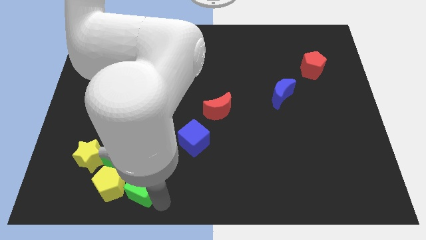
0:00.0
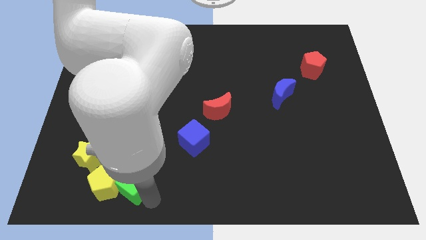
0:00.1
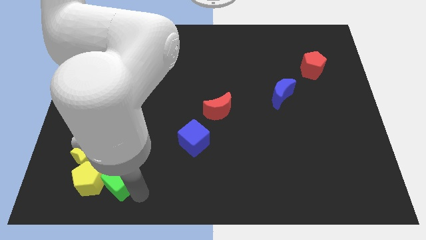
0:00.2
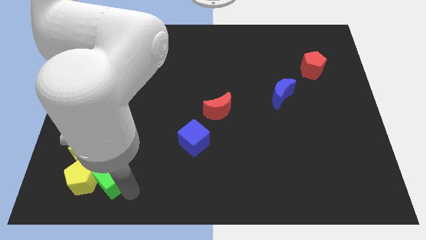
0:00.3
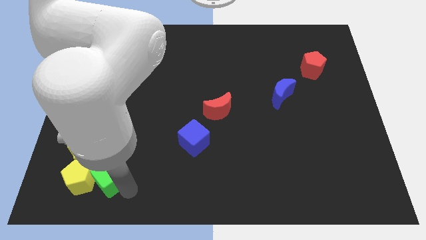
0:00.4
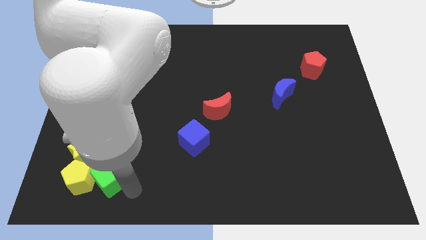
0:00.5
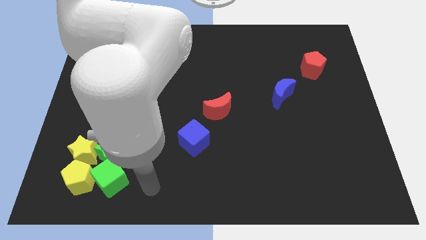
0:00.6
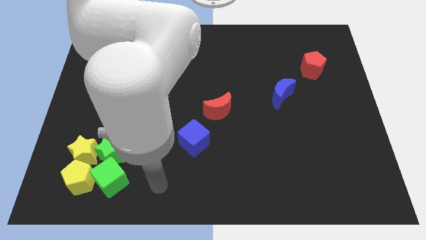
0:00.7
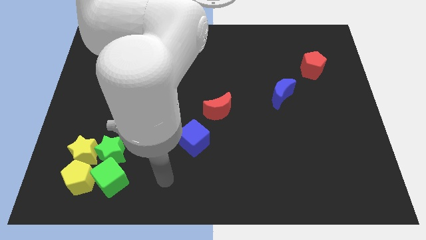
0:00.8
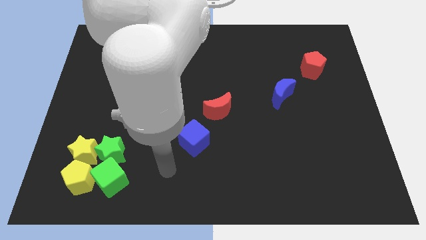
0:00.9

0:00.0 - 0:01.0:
push the green cube into the yellow pentagon

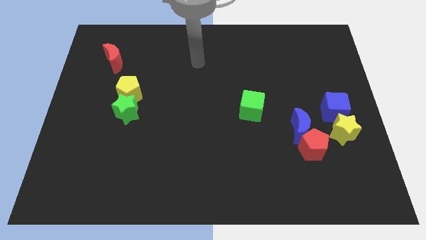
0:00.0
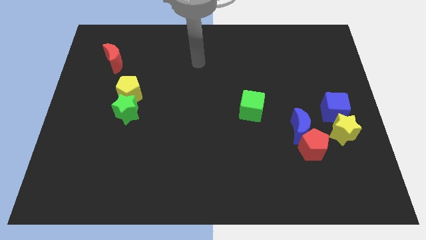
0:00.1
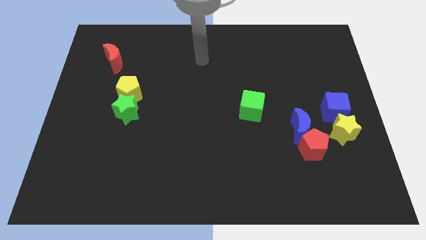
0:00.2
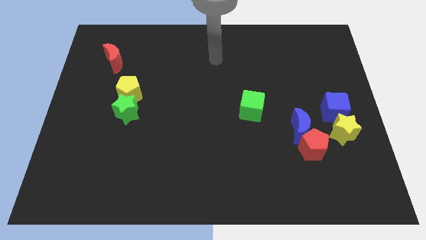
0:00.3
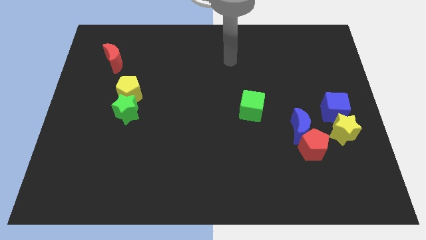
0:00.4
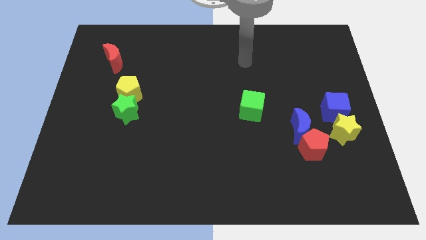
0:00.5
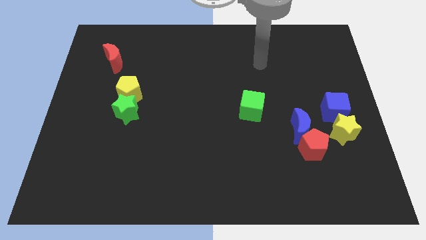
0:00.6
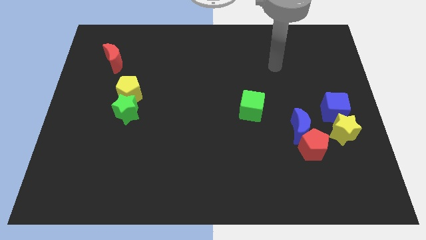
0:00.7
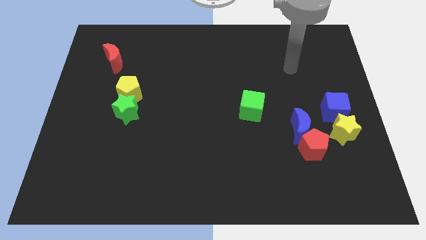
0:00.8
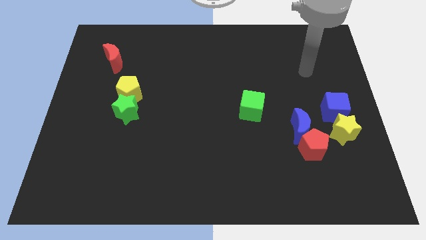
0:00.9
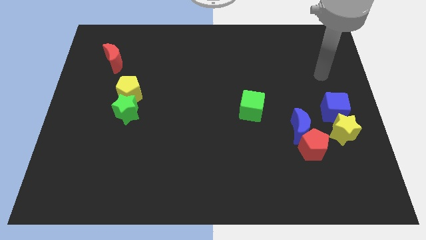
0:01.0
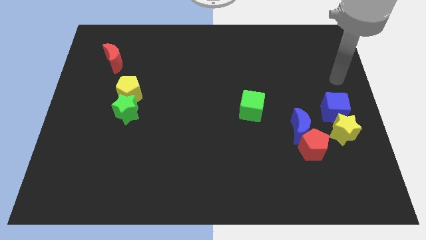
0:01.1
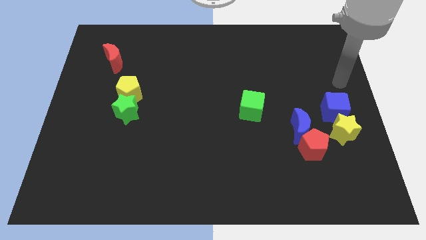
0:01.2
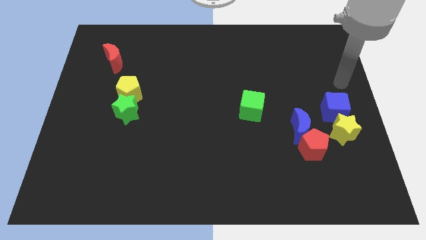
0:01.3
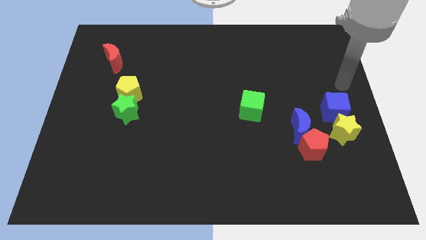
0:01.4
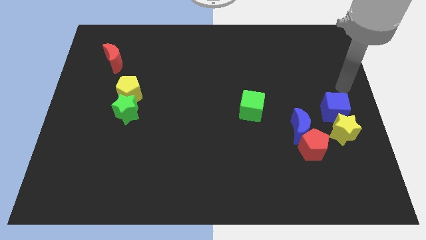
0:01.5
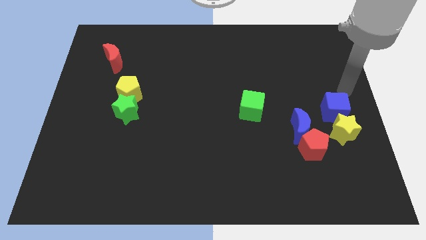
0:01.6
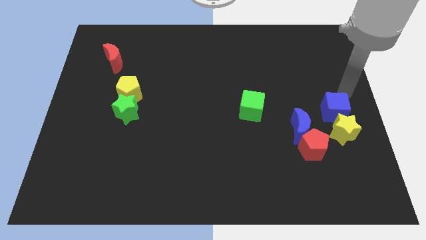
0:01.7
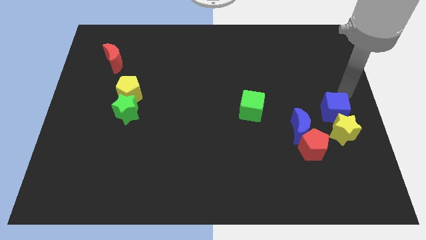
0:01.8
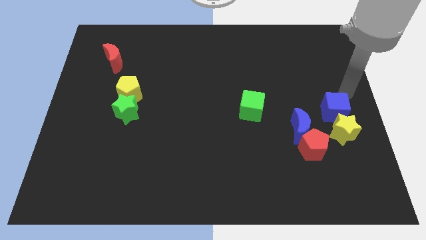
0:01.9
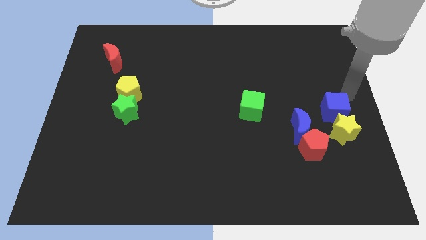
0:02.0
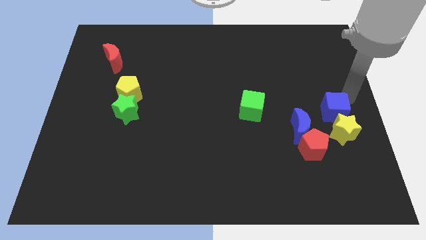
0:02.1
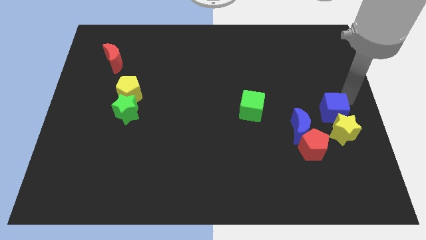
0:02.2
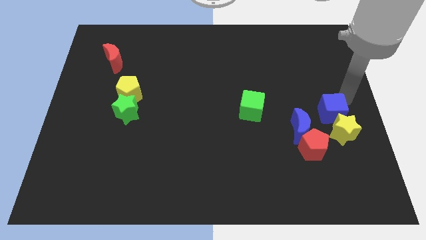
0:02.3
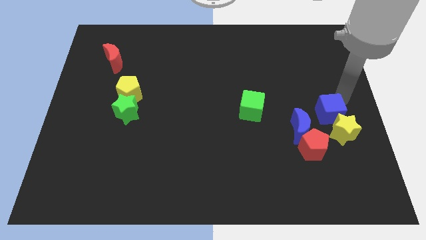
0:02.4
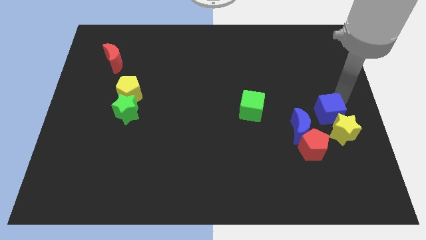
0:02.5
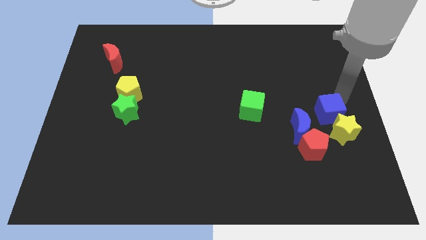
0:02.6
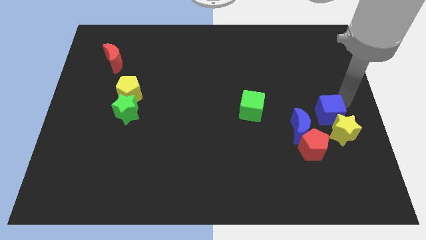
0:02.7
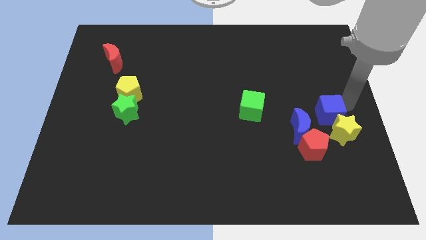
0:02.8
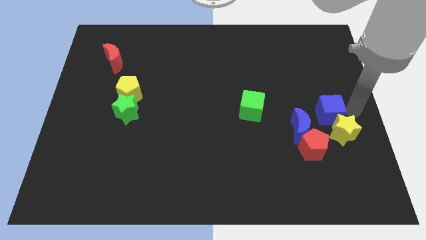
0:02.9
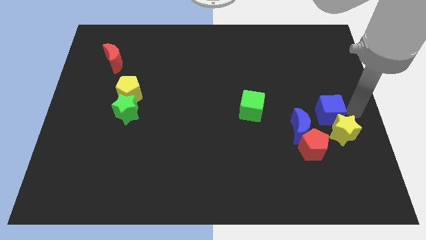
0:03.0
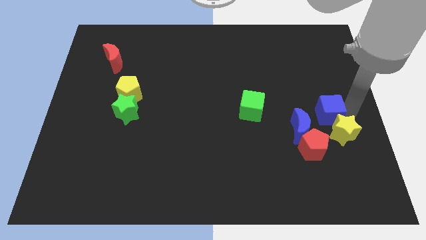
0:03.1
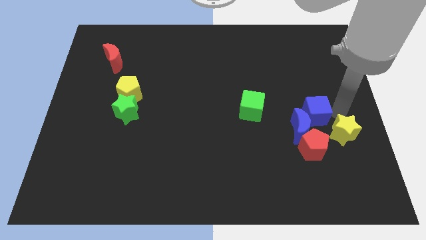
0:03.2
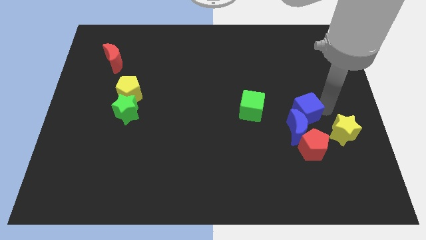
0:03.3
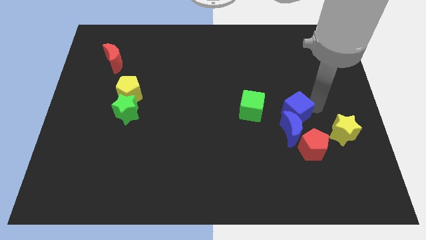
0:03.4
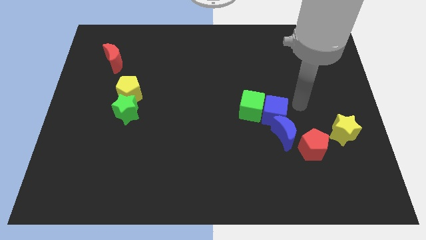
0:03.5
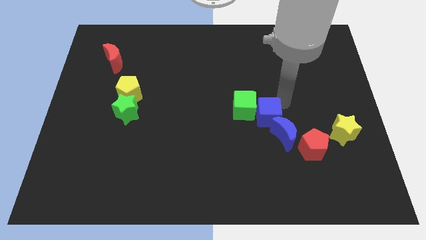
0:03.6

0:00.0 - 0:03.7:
place the blue cube to the right side of the green square

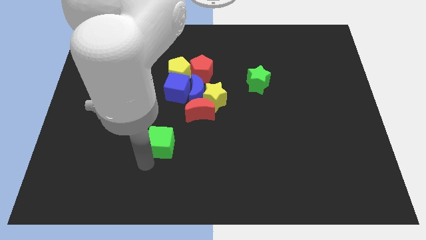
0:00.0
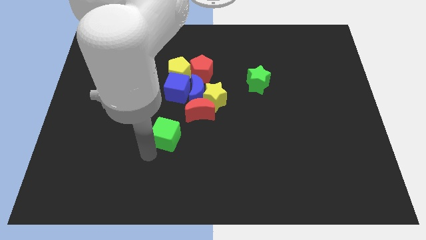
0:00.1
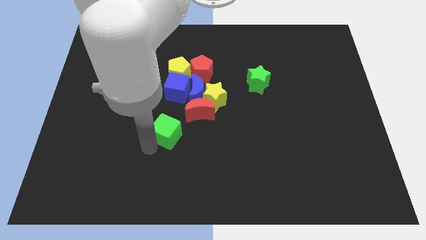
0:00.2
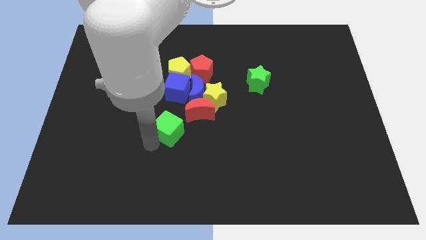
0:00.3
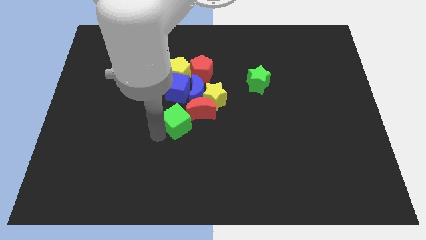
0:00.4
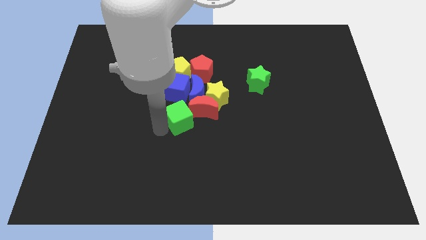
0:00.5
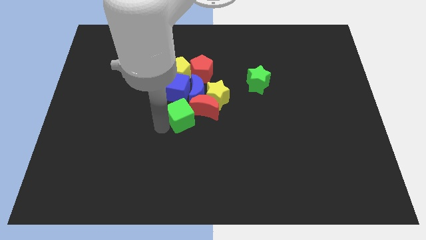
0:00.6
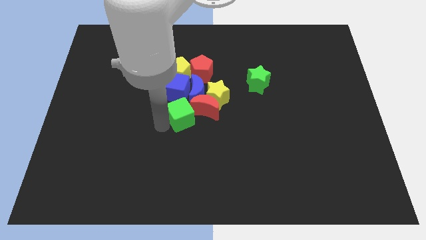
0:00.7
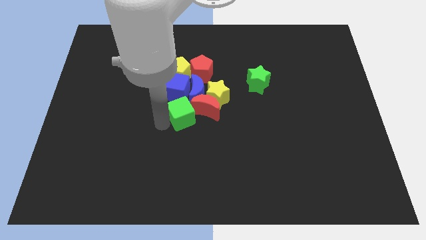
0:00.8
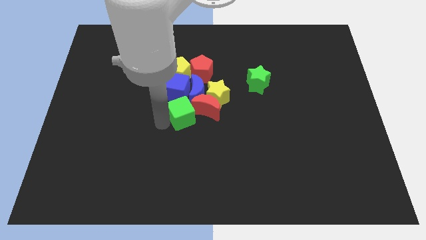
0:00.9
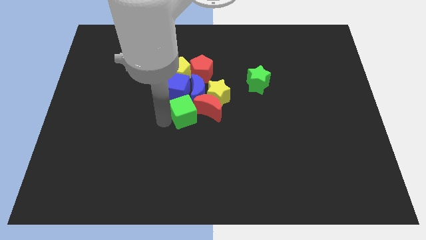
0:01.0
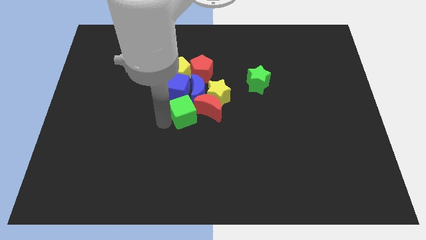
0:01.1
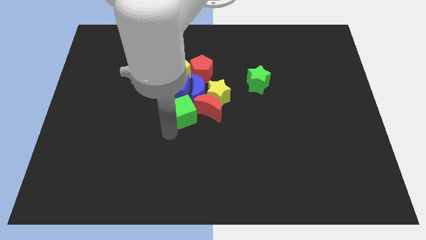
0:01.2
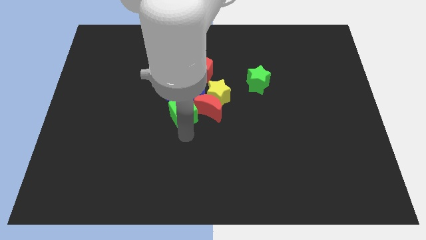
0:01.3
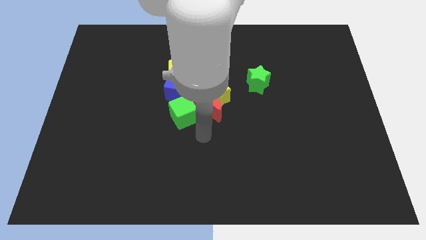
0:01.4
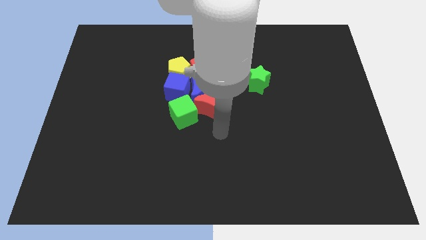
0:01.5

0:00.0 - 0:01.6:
add the green cube to the group of blocks at the center of the board

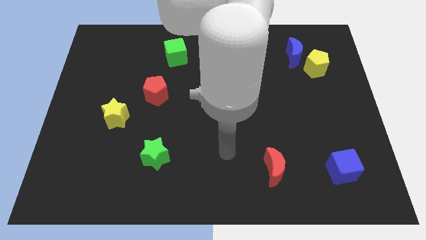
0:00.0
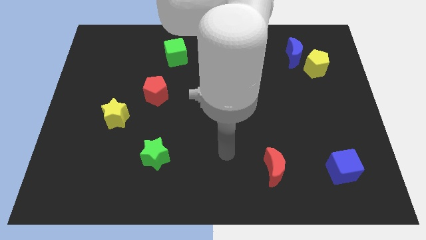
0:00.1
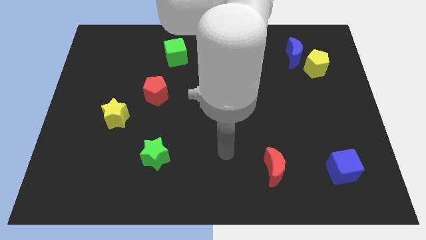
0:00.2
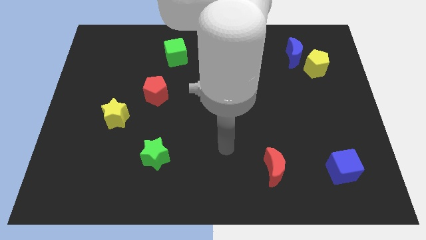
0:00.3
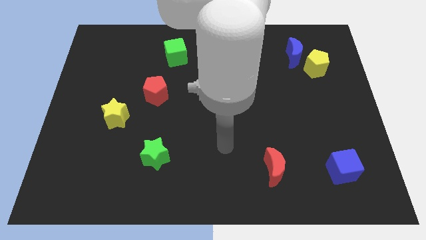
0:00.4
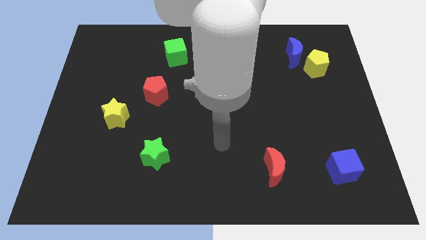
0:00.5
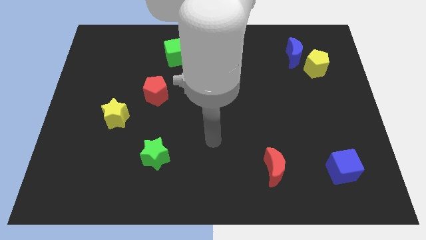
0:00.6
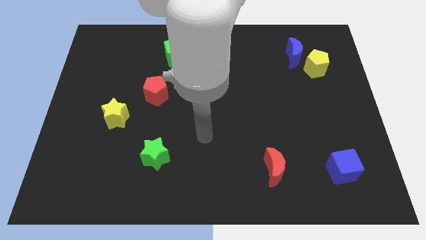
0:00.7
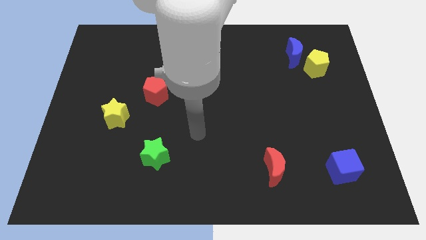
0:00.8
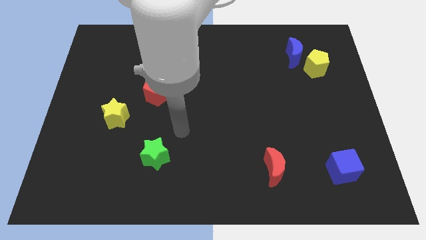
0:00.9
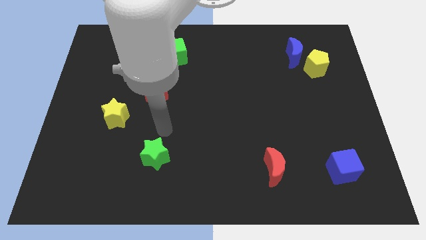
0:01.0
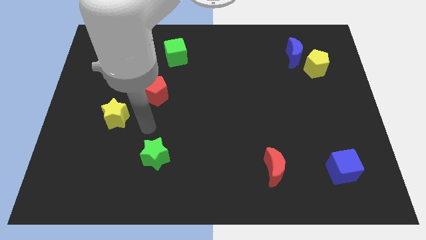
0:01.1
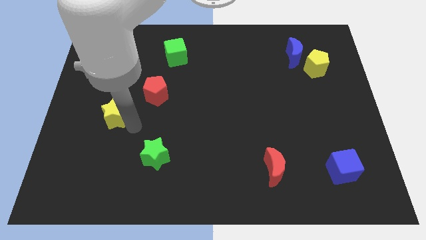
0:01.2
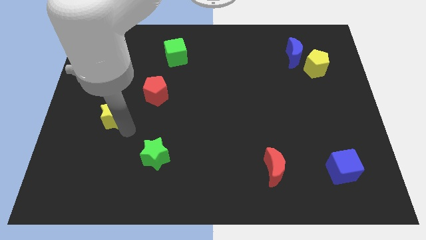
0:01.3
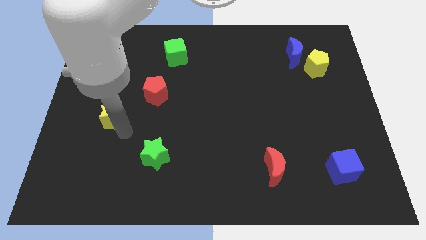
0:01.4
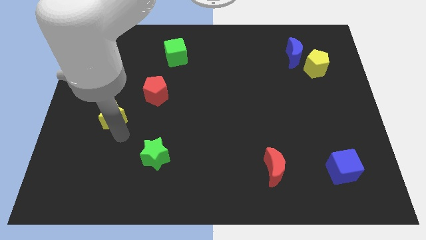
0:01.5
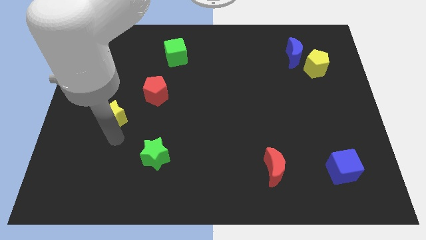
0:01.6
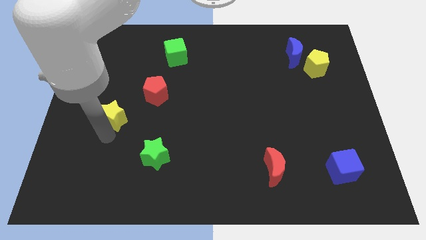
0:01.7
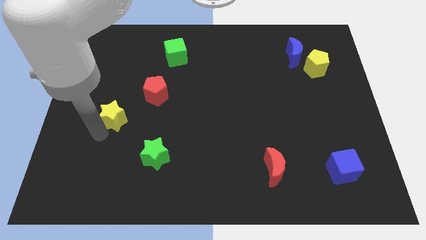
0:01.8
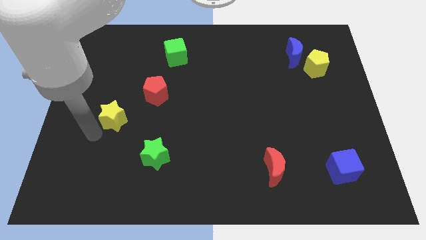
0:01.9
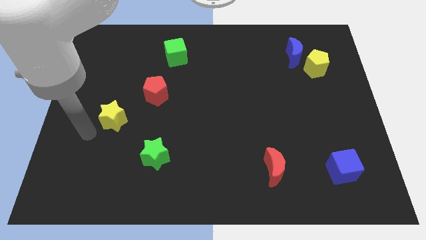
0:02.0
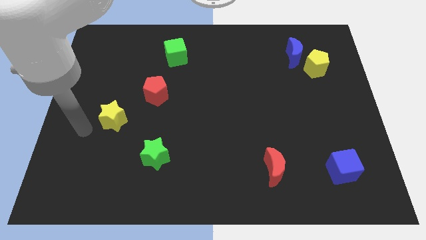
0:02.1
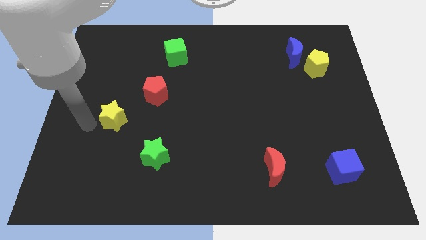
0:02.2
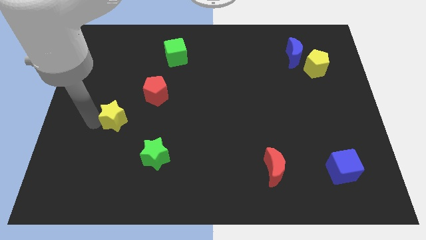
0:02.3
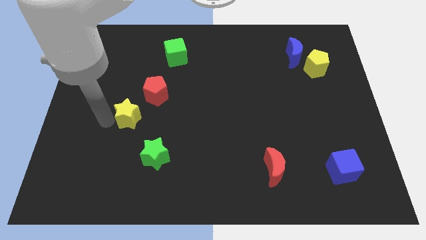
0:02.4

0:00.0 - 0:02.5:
push the yellow star to the right of the board

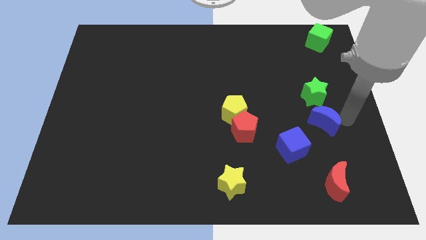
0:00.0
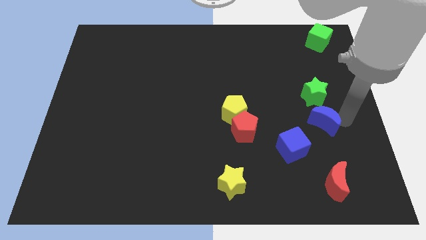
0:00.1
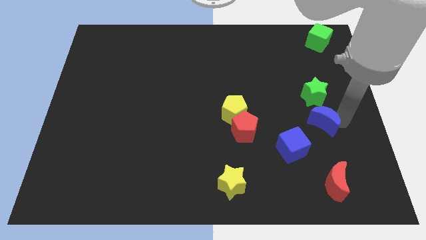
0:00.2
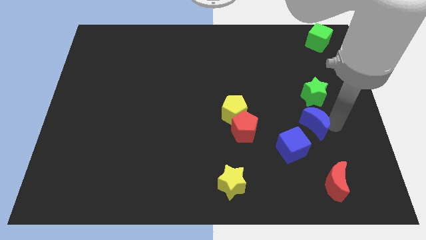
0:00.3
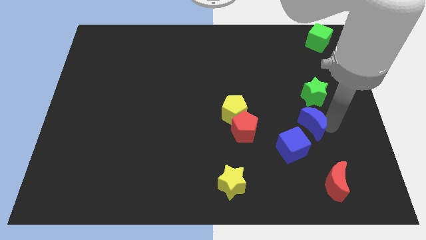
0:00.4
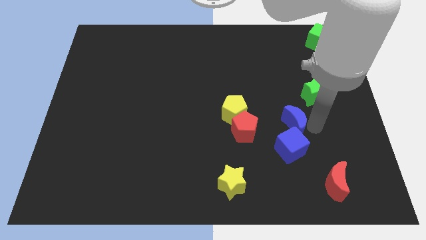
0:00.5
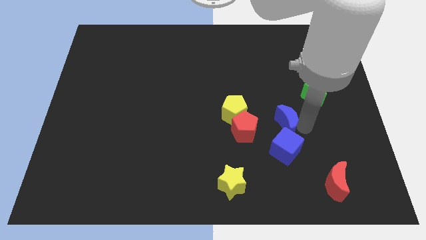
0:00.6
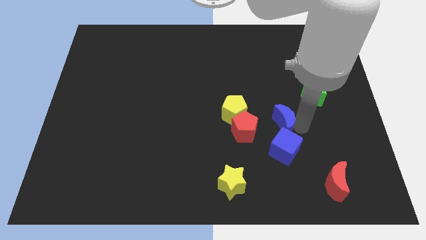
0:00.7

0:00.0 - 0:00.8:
put the blue moon at the top of the blue cube
